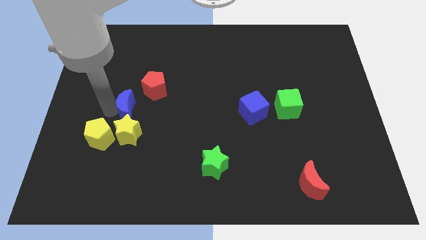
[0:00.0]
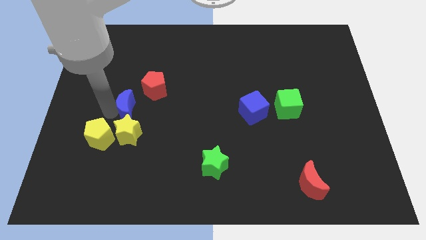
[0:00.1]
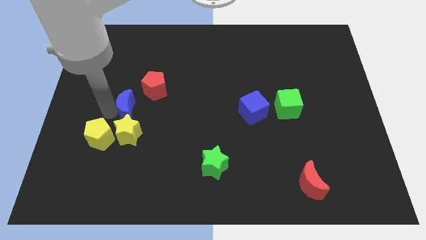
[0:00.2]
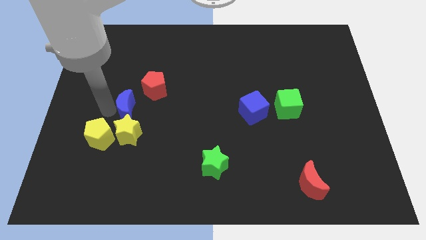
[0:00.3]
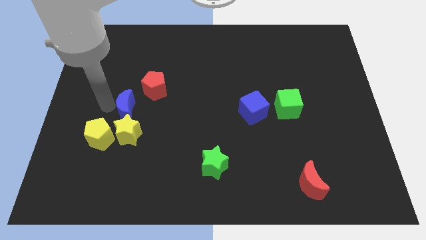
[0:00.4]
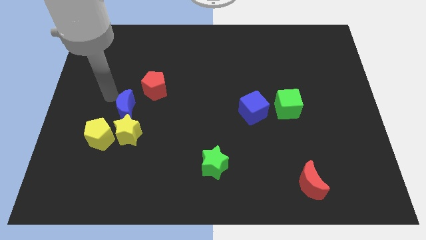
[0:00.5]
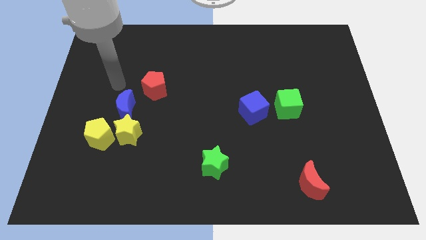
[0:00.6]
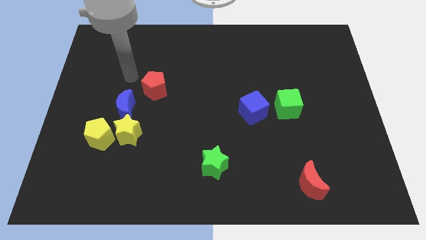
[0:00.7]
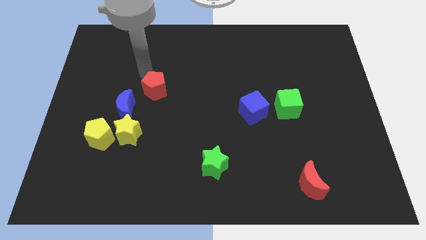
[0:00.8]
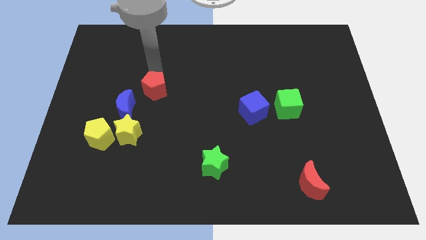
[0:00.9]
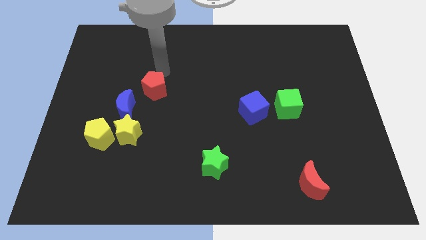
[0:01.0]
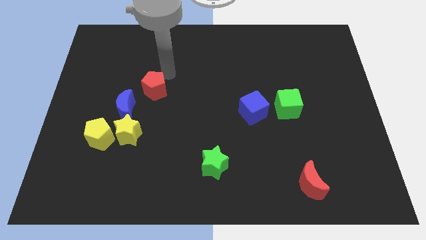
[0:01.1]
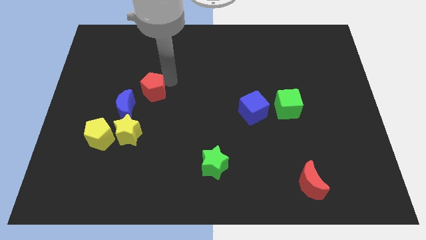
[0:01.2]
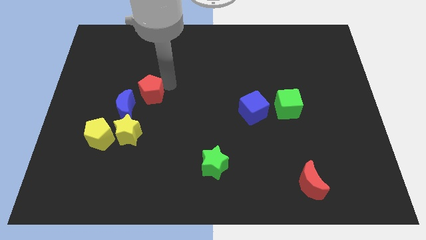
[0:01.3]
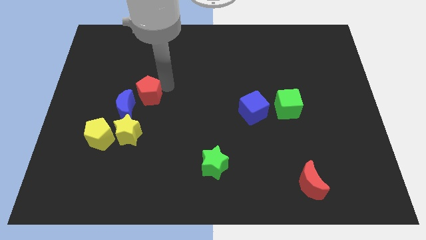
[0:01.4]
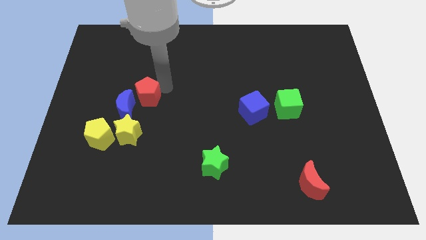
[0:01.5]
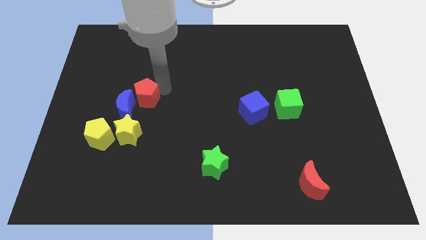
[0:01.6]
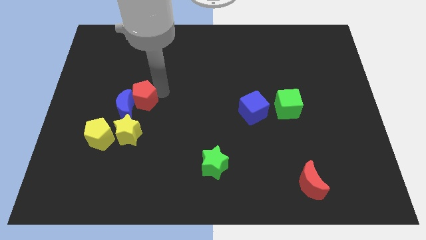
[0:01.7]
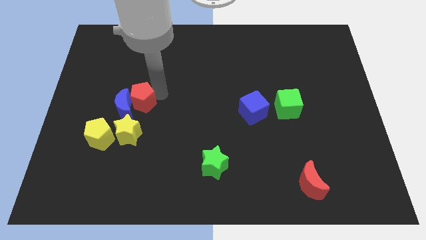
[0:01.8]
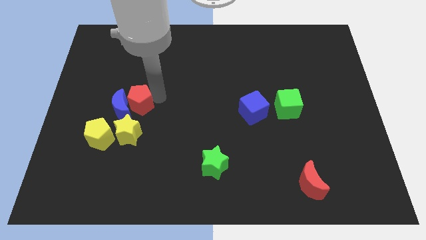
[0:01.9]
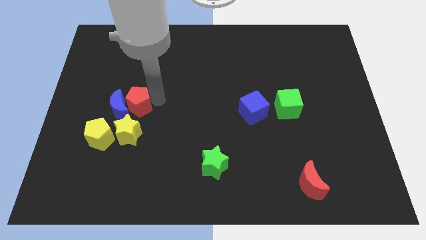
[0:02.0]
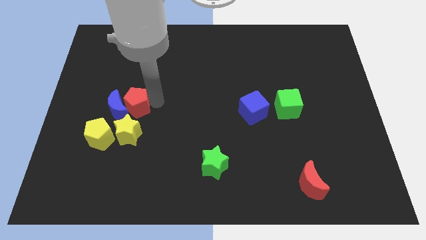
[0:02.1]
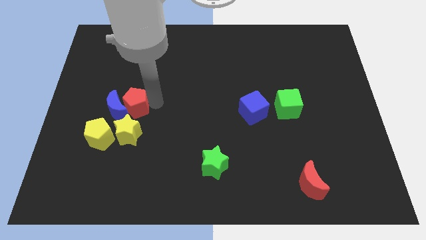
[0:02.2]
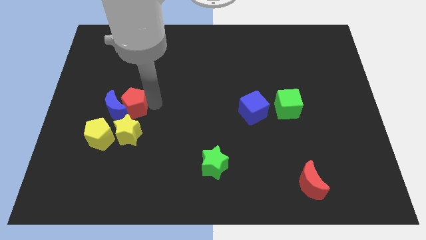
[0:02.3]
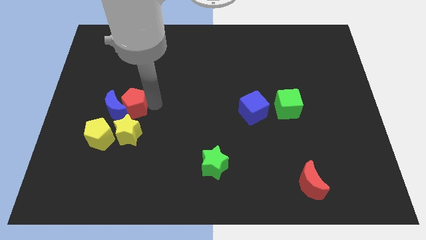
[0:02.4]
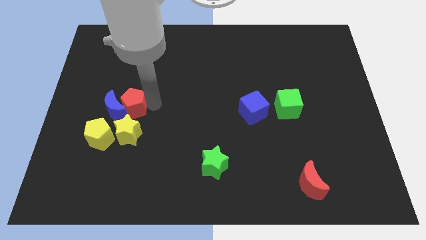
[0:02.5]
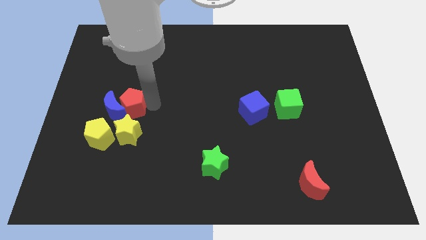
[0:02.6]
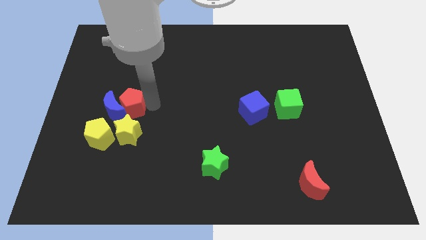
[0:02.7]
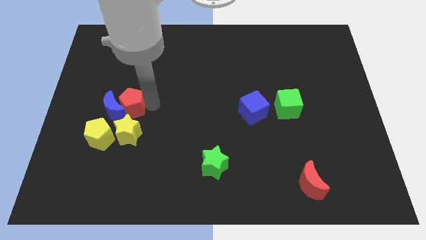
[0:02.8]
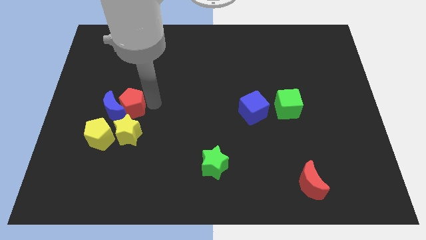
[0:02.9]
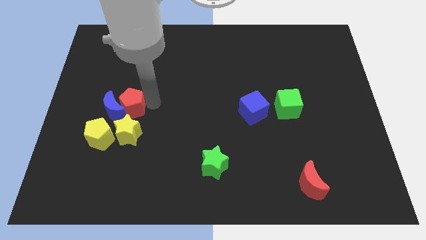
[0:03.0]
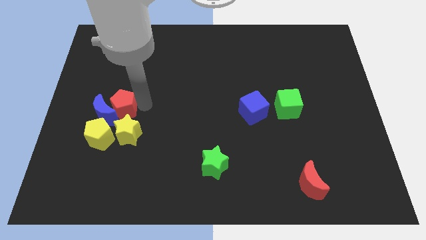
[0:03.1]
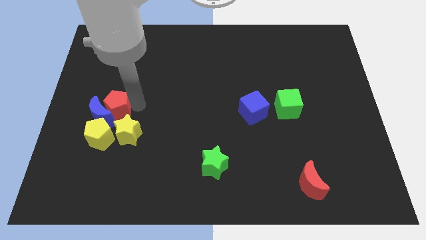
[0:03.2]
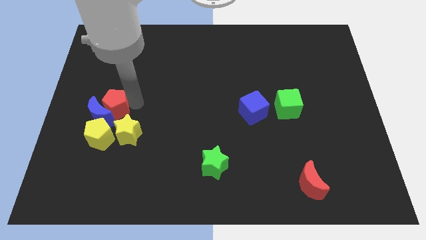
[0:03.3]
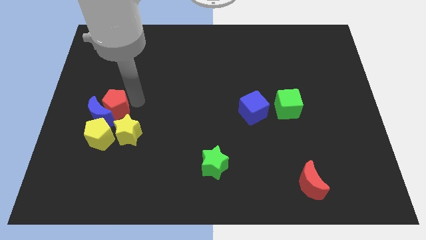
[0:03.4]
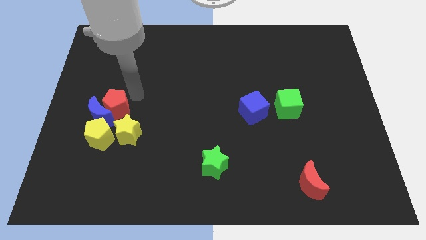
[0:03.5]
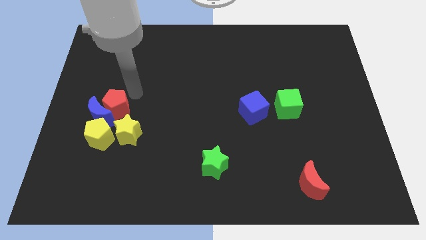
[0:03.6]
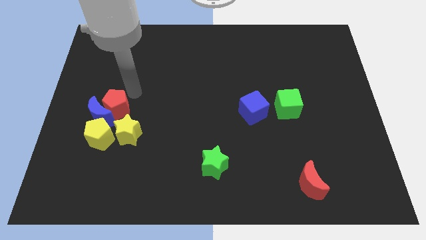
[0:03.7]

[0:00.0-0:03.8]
push the red pentagon into the right of the blue crescent

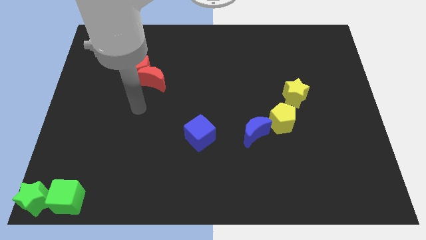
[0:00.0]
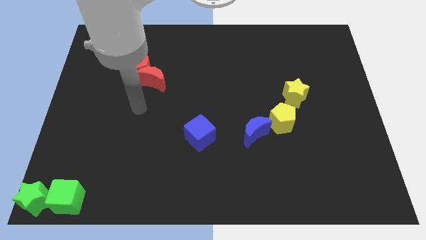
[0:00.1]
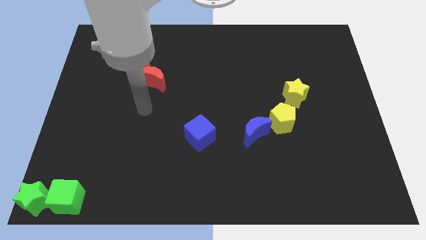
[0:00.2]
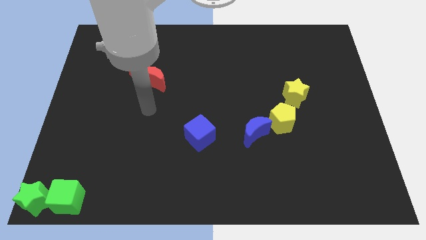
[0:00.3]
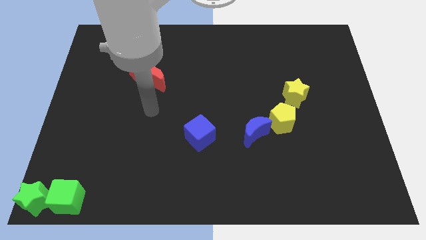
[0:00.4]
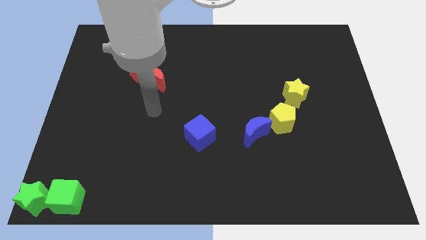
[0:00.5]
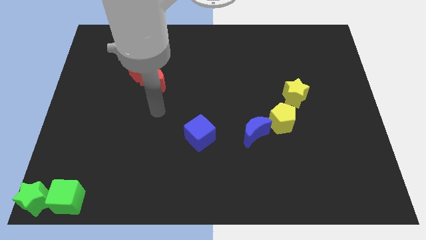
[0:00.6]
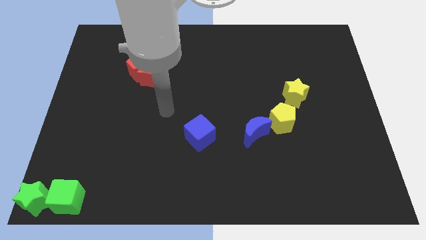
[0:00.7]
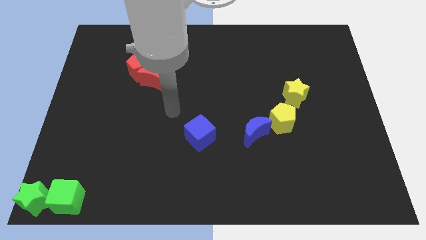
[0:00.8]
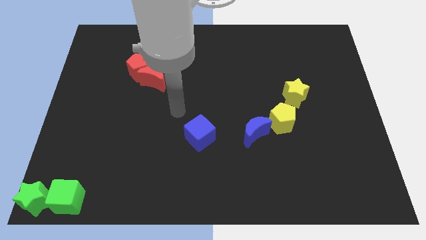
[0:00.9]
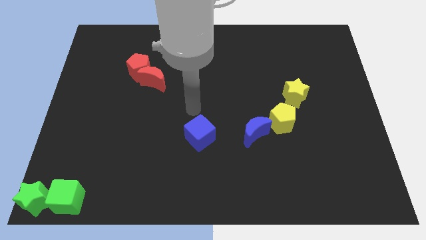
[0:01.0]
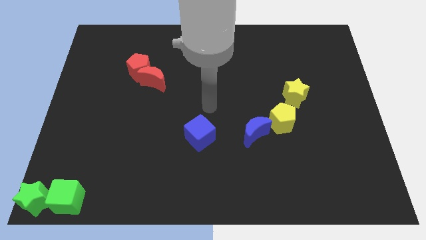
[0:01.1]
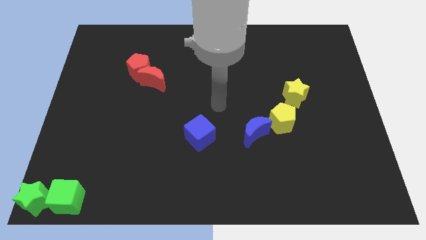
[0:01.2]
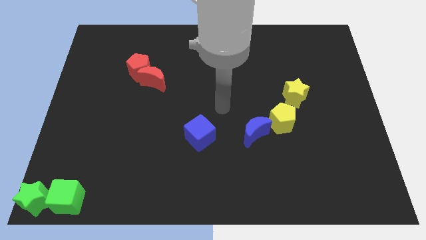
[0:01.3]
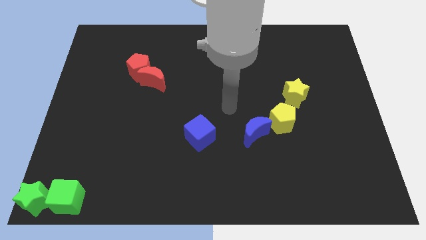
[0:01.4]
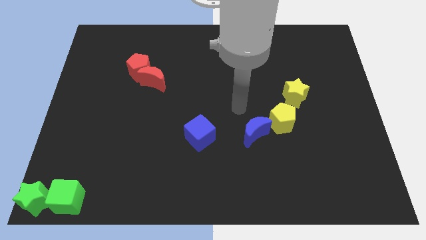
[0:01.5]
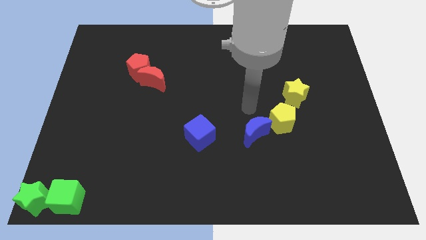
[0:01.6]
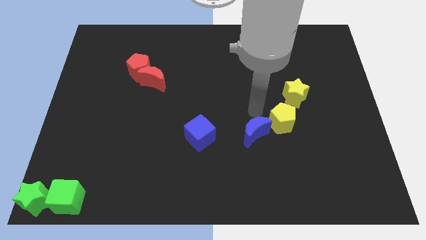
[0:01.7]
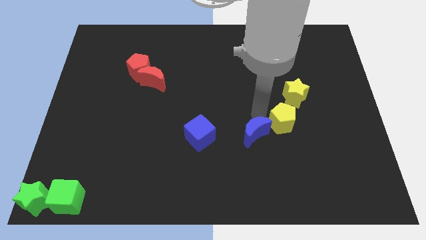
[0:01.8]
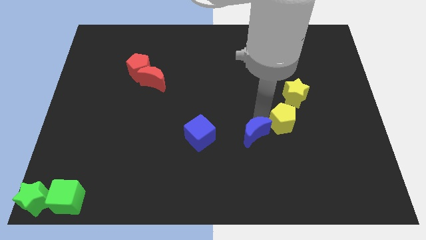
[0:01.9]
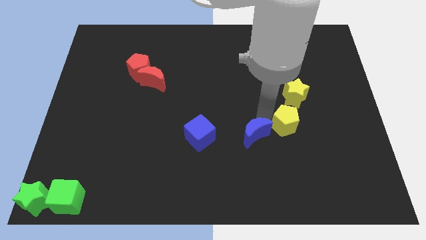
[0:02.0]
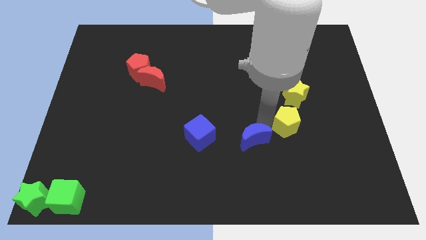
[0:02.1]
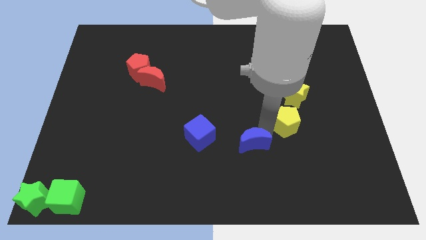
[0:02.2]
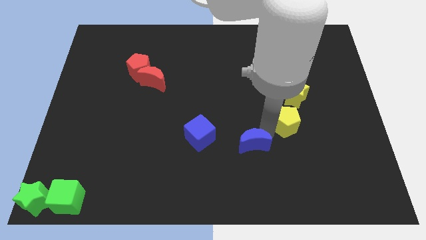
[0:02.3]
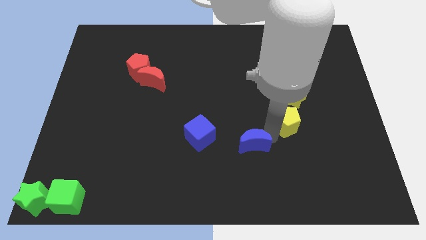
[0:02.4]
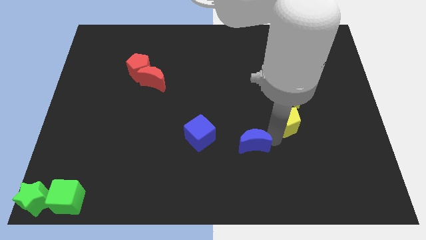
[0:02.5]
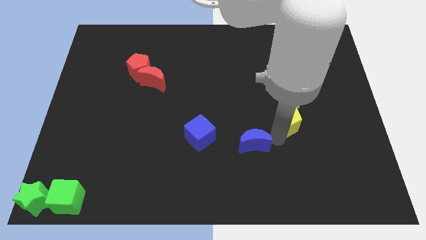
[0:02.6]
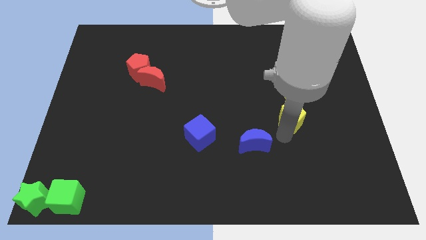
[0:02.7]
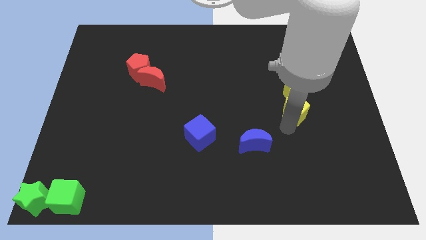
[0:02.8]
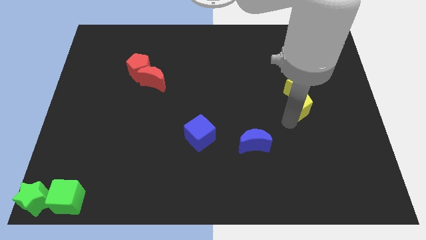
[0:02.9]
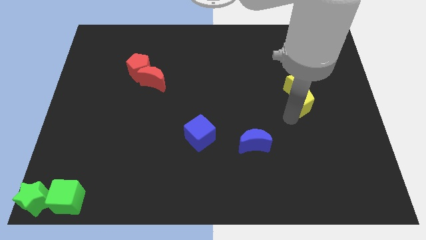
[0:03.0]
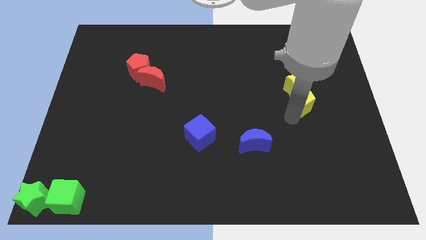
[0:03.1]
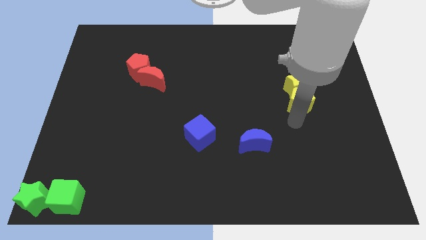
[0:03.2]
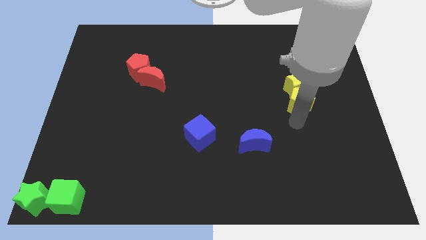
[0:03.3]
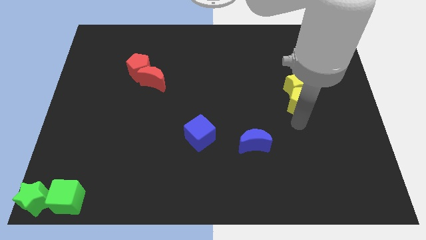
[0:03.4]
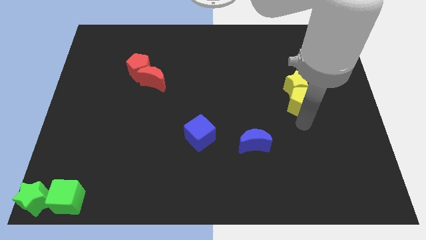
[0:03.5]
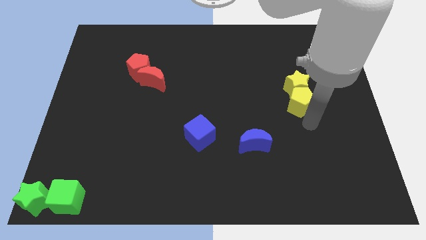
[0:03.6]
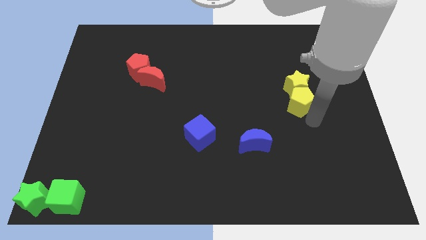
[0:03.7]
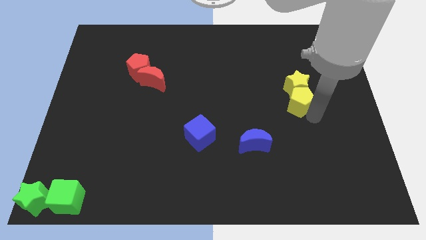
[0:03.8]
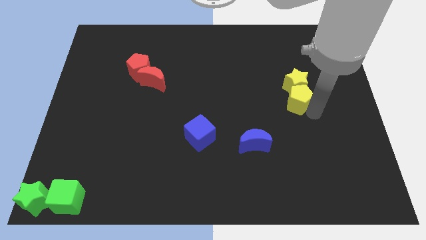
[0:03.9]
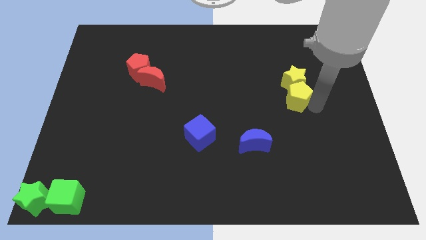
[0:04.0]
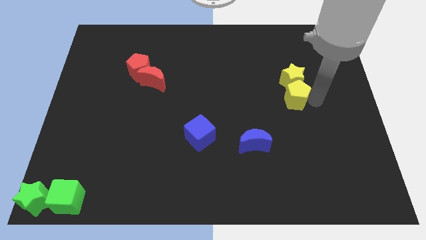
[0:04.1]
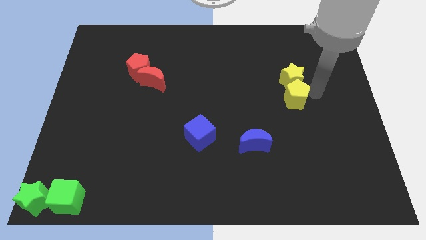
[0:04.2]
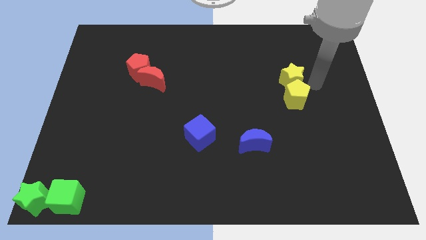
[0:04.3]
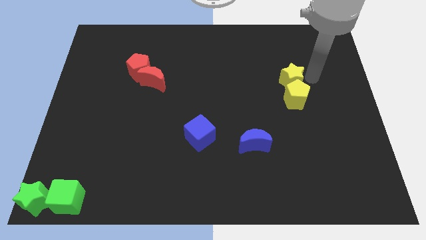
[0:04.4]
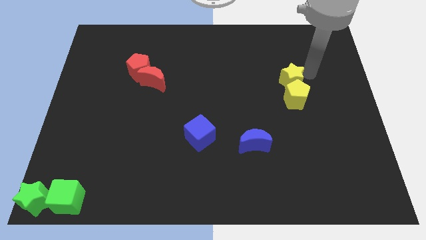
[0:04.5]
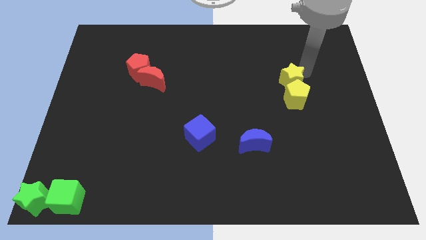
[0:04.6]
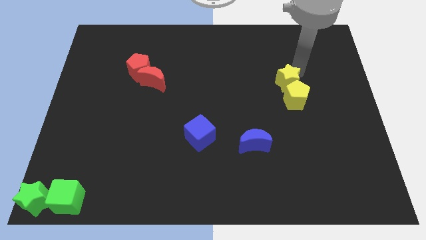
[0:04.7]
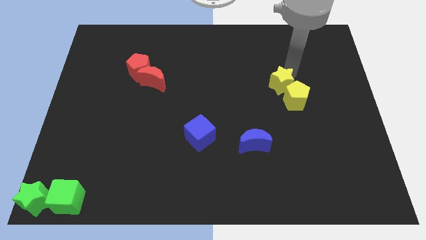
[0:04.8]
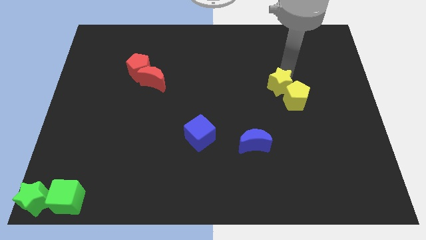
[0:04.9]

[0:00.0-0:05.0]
separate the yellow blocks from blue moon

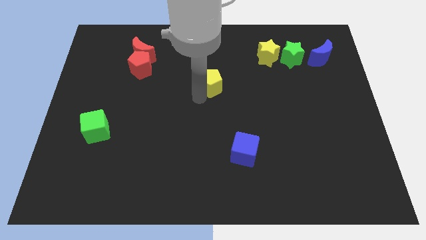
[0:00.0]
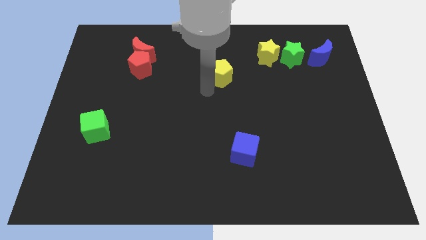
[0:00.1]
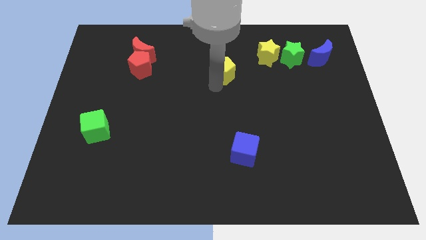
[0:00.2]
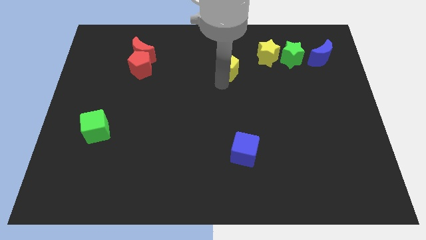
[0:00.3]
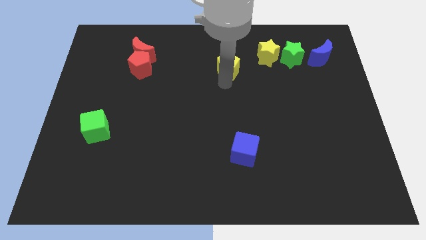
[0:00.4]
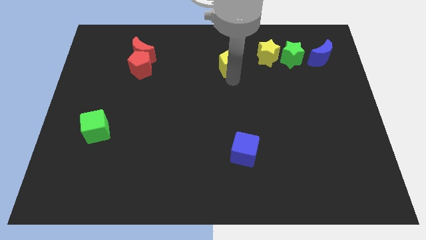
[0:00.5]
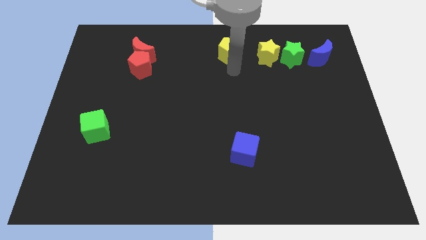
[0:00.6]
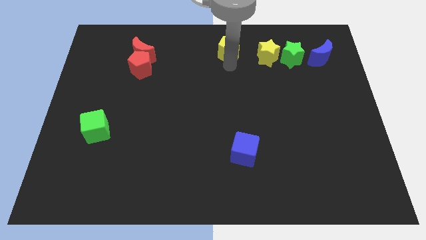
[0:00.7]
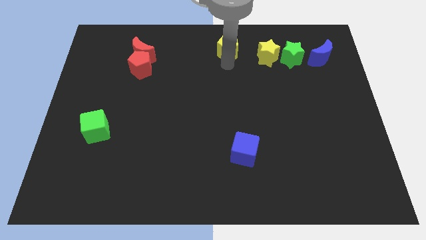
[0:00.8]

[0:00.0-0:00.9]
place yellow pentagon to the left of yellow star
